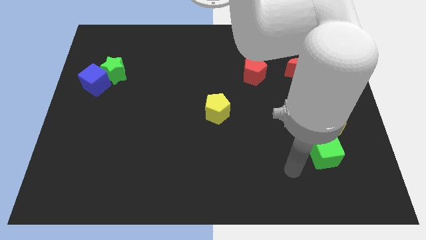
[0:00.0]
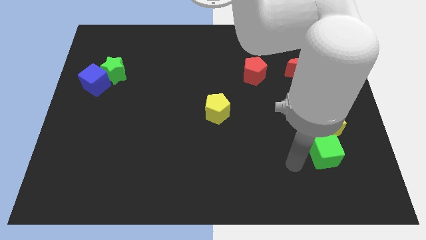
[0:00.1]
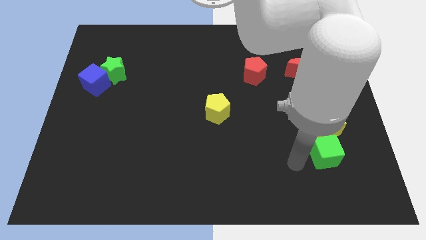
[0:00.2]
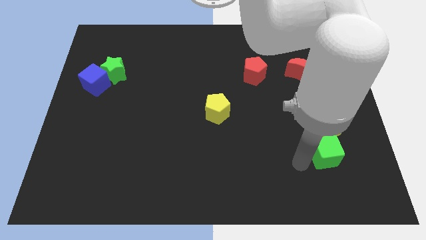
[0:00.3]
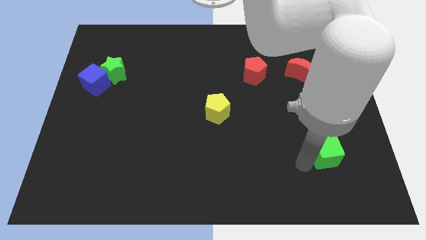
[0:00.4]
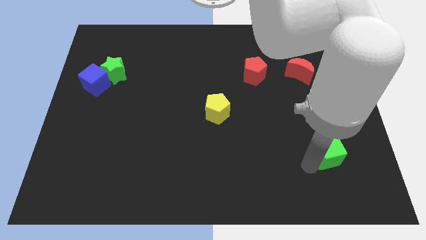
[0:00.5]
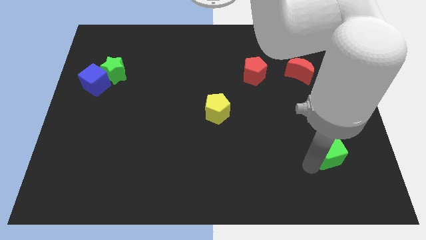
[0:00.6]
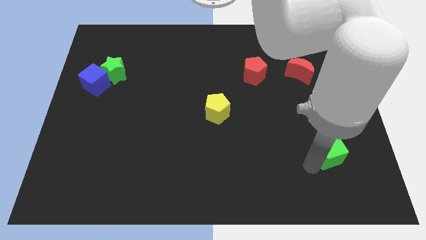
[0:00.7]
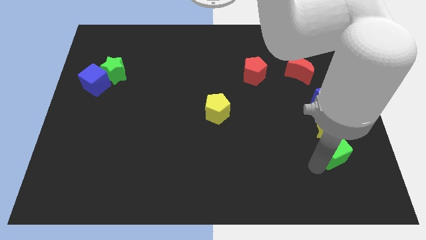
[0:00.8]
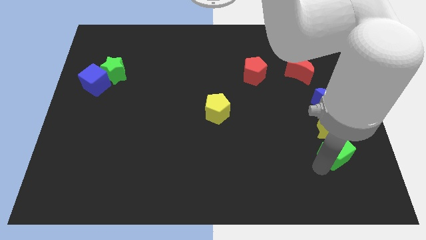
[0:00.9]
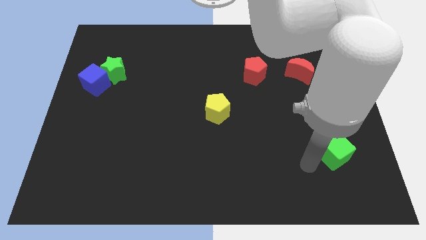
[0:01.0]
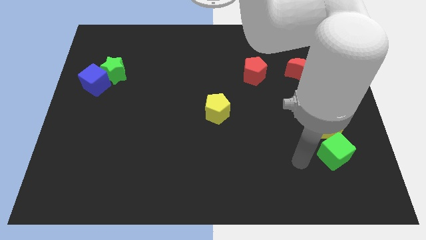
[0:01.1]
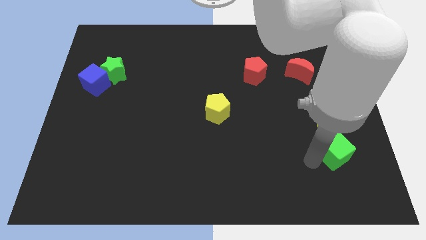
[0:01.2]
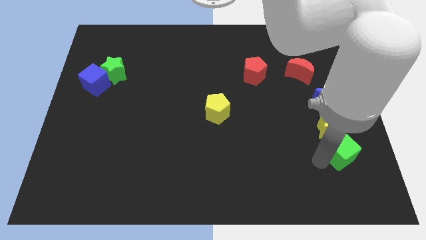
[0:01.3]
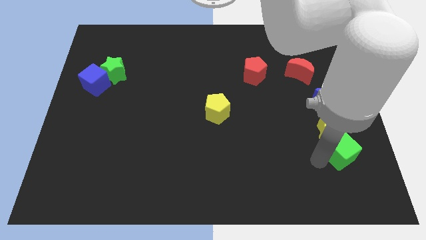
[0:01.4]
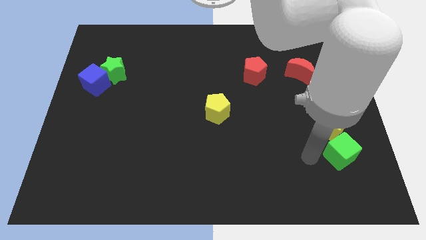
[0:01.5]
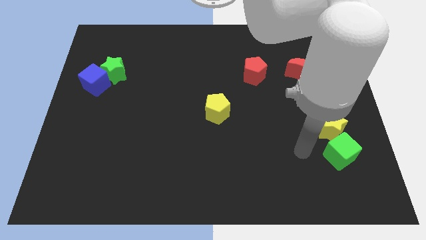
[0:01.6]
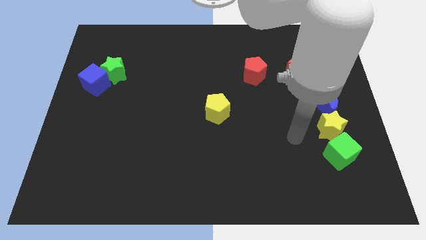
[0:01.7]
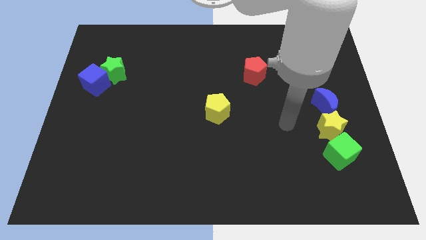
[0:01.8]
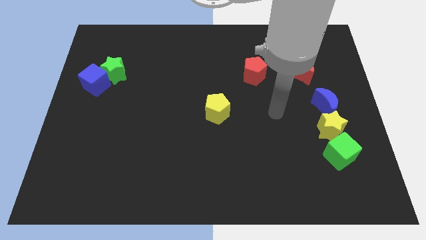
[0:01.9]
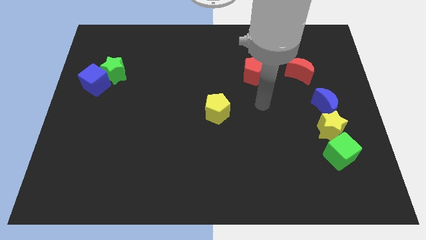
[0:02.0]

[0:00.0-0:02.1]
move green cube close to yellow star

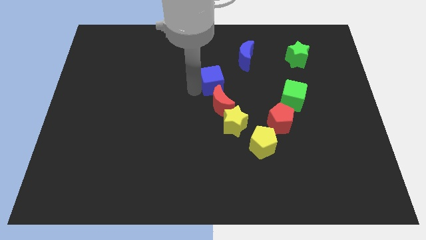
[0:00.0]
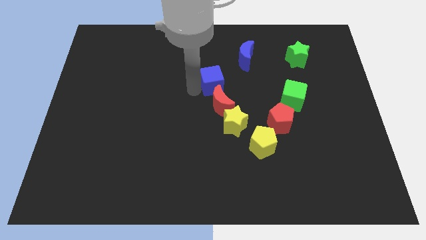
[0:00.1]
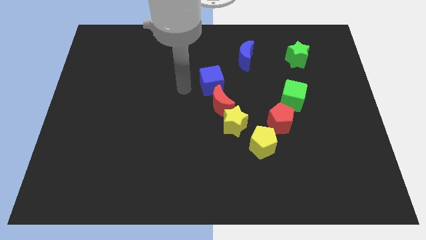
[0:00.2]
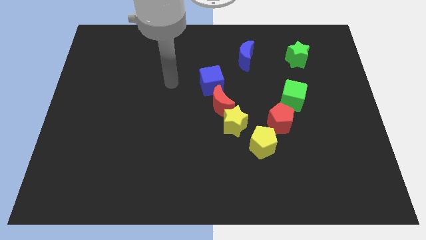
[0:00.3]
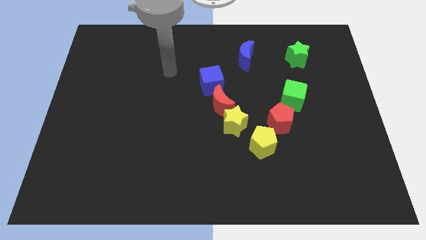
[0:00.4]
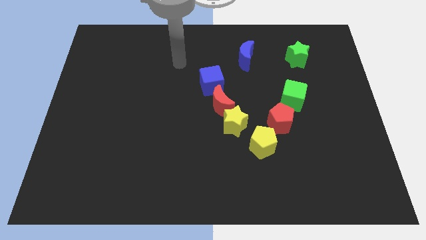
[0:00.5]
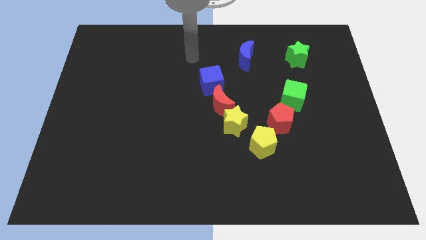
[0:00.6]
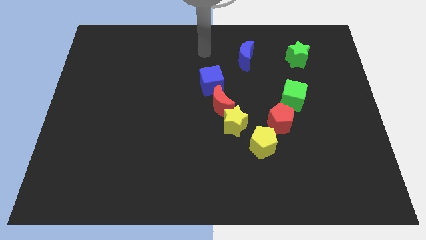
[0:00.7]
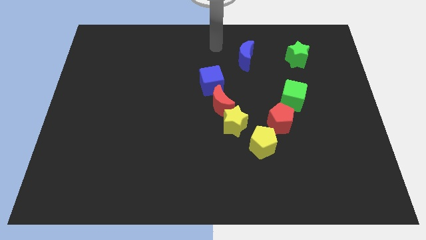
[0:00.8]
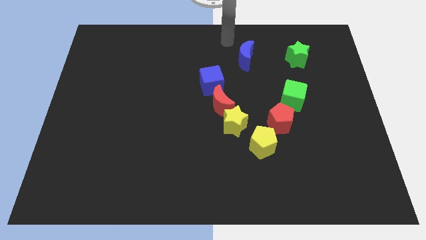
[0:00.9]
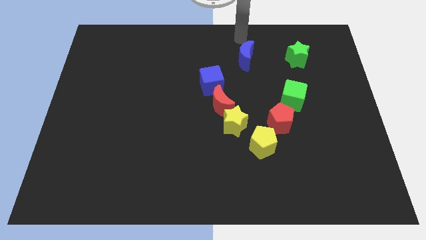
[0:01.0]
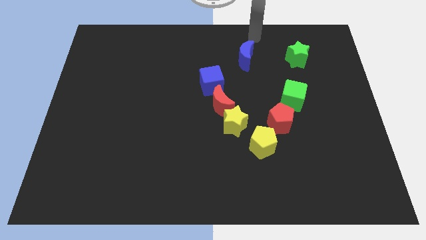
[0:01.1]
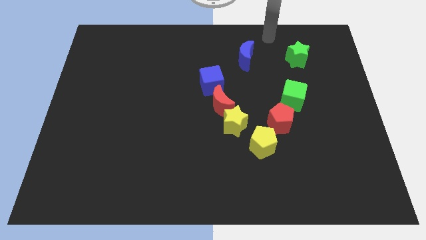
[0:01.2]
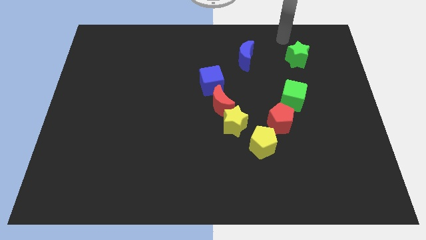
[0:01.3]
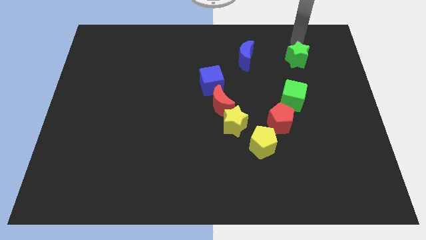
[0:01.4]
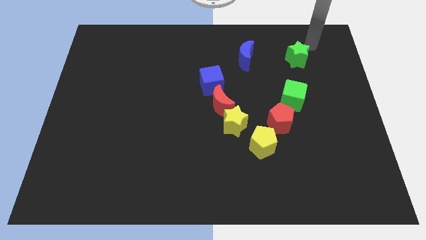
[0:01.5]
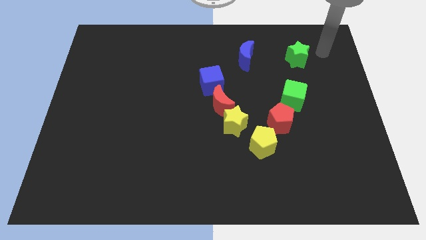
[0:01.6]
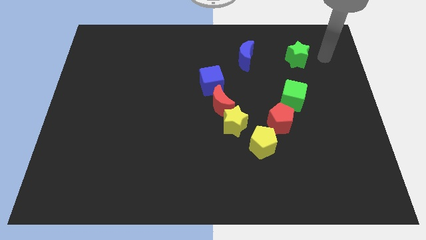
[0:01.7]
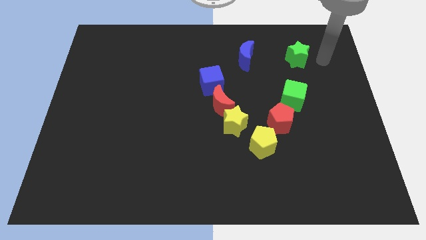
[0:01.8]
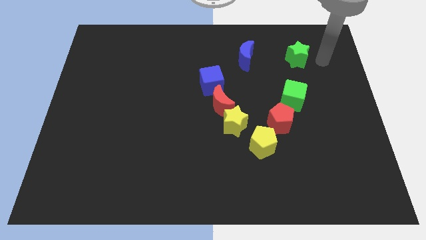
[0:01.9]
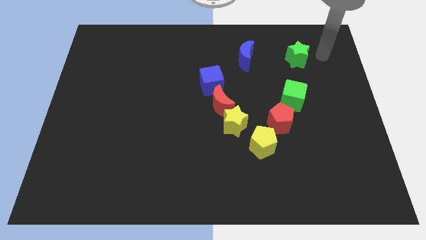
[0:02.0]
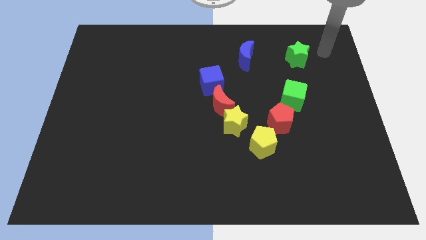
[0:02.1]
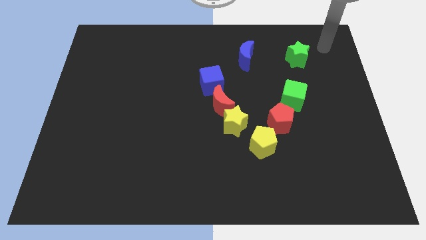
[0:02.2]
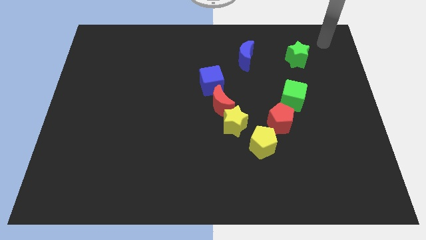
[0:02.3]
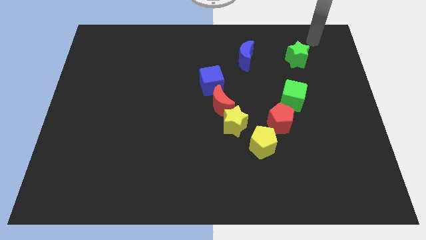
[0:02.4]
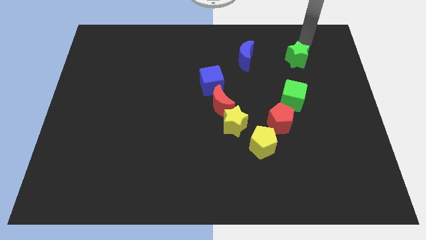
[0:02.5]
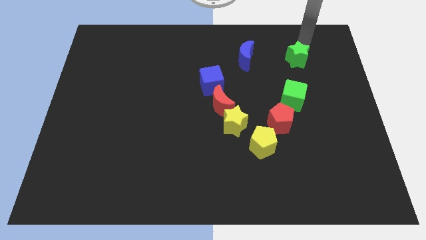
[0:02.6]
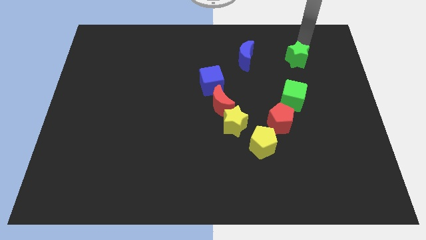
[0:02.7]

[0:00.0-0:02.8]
point your arm at the top of green star

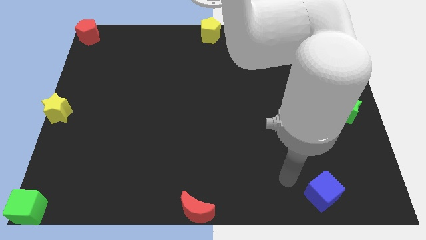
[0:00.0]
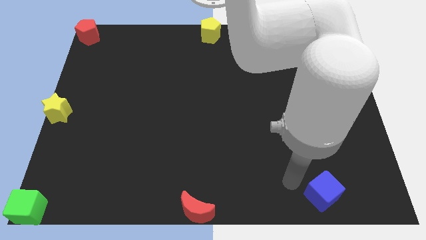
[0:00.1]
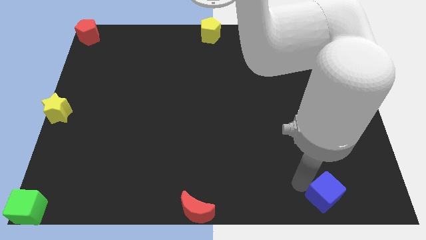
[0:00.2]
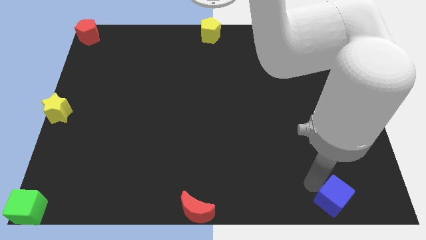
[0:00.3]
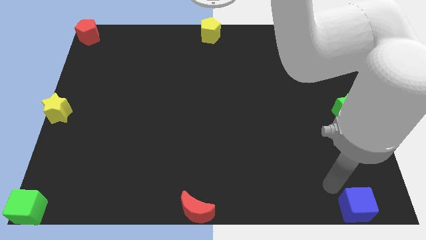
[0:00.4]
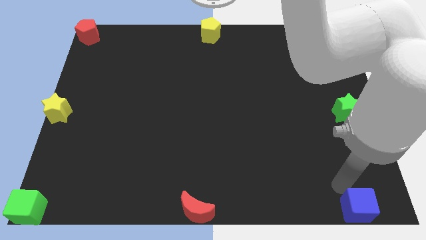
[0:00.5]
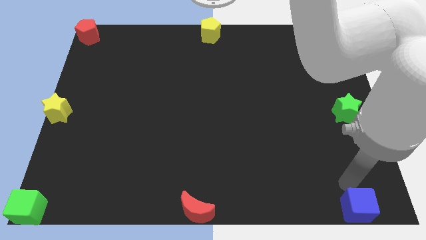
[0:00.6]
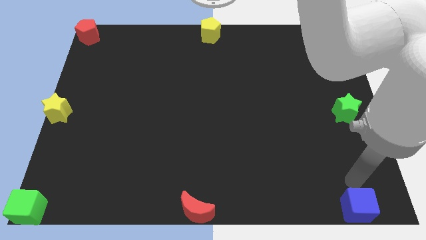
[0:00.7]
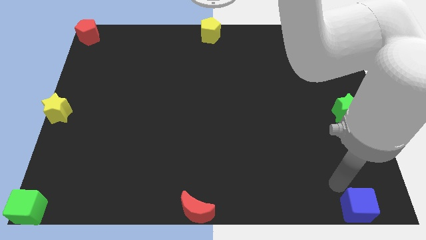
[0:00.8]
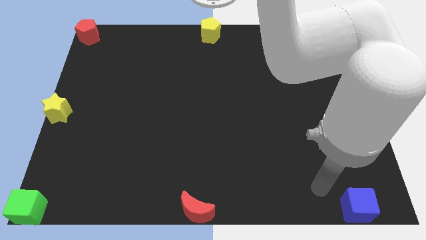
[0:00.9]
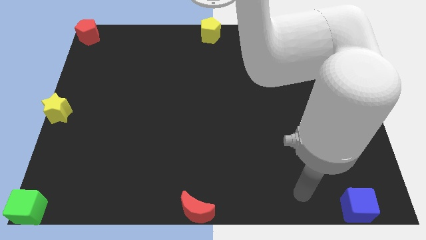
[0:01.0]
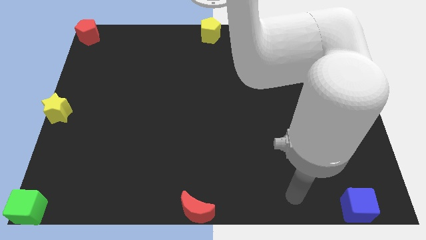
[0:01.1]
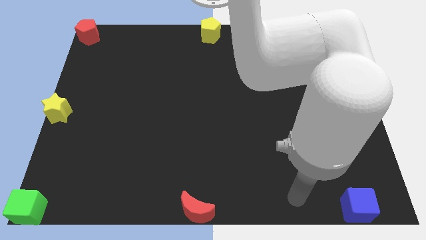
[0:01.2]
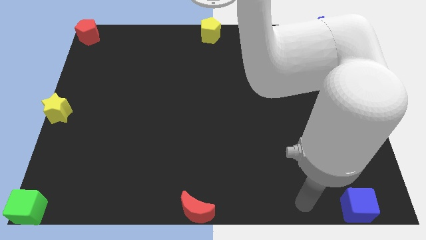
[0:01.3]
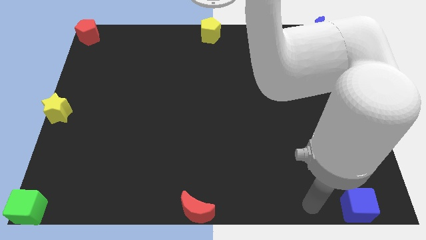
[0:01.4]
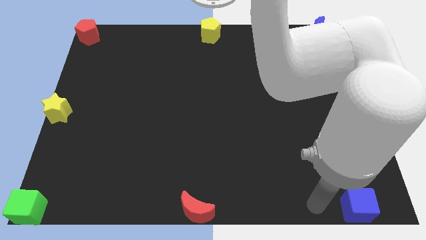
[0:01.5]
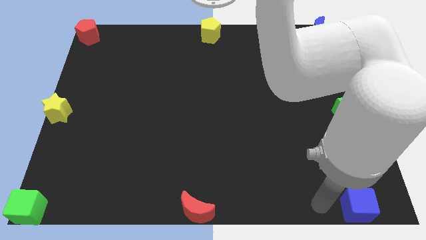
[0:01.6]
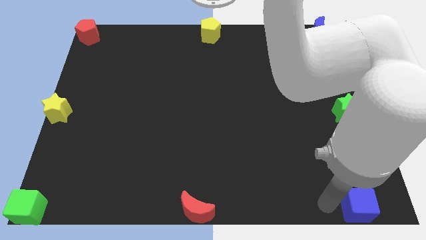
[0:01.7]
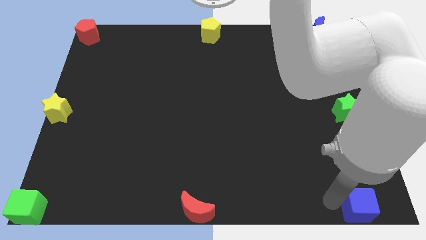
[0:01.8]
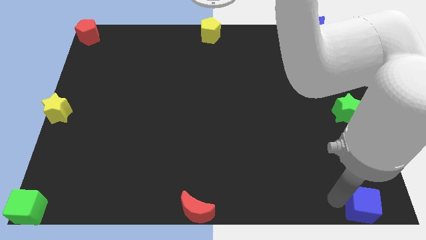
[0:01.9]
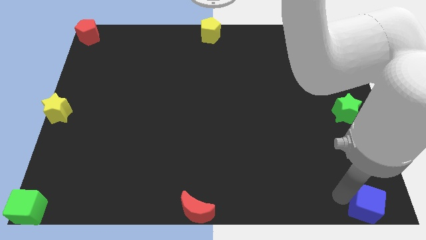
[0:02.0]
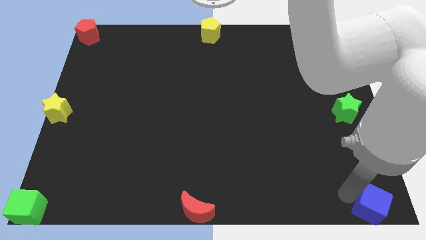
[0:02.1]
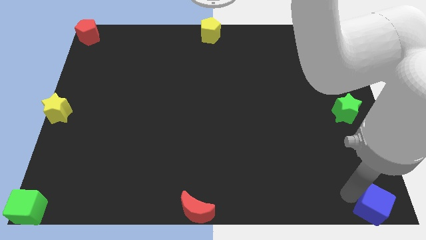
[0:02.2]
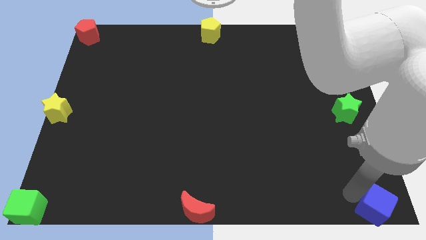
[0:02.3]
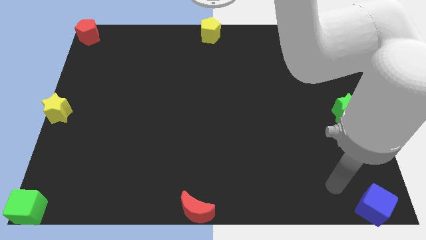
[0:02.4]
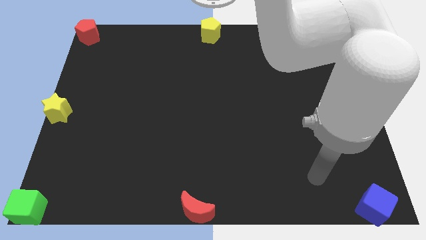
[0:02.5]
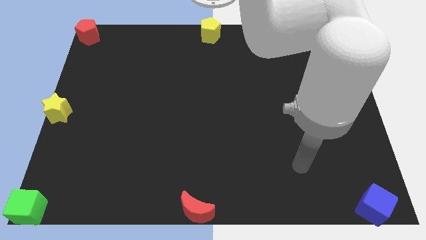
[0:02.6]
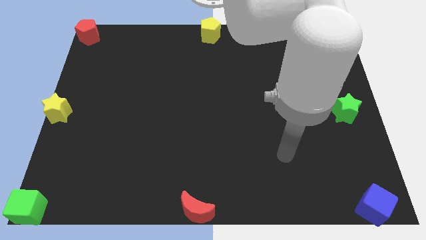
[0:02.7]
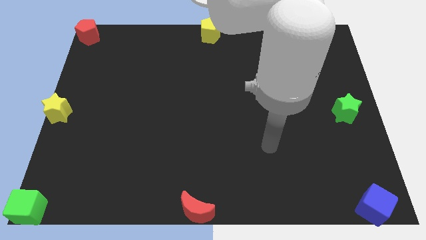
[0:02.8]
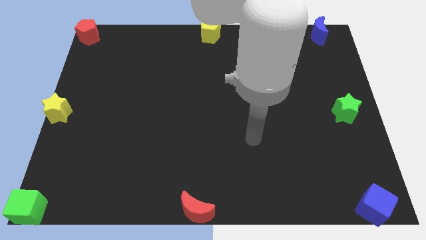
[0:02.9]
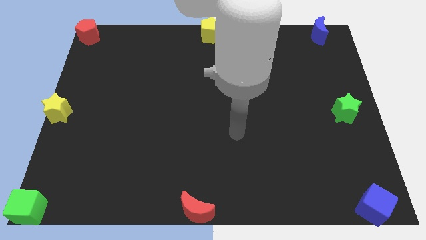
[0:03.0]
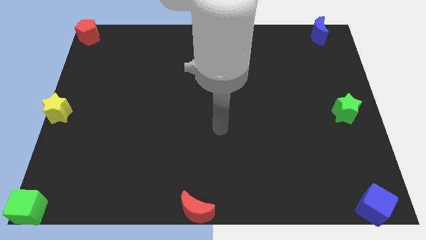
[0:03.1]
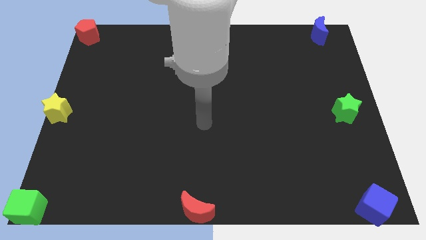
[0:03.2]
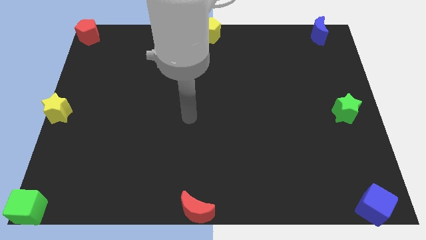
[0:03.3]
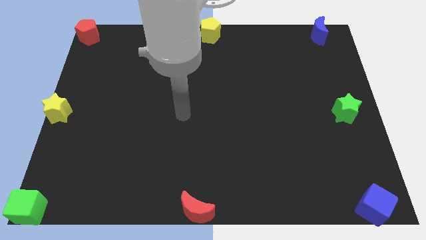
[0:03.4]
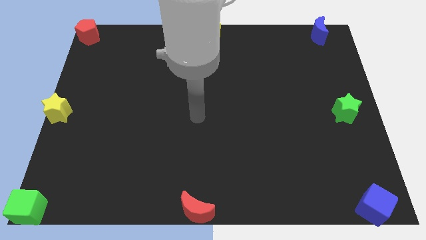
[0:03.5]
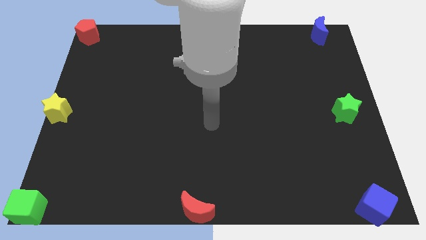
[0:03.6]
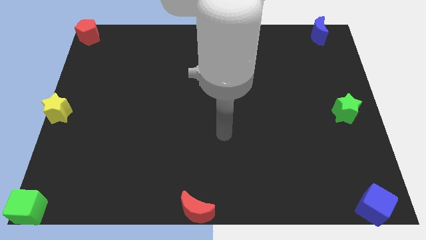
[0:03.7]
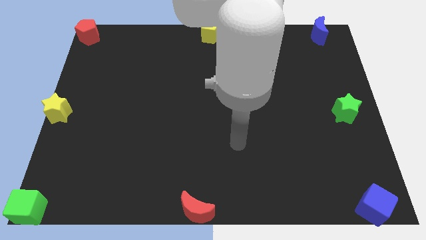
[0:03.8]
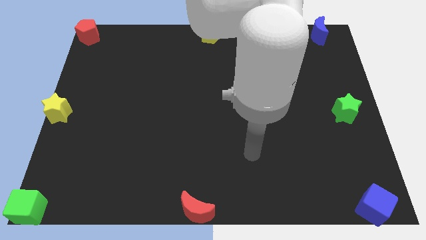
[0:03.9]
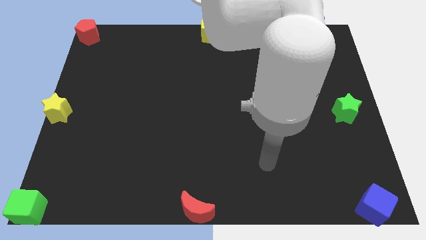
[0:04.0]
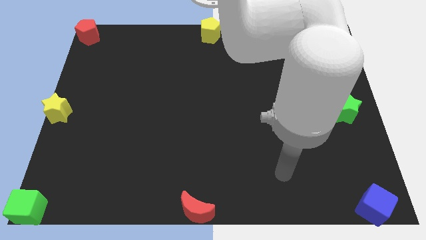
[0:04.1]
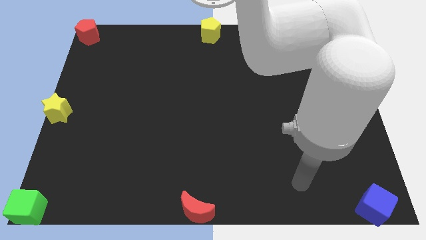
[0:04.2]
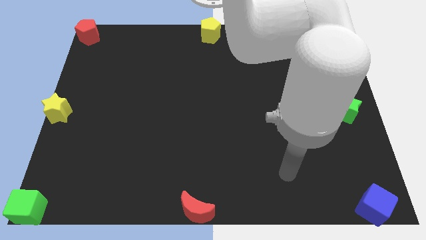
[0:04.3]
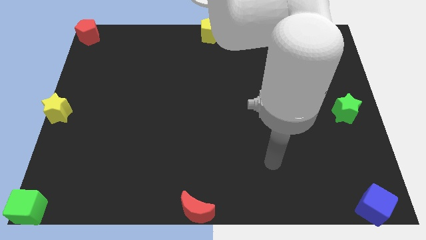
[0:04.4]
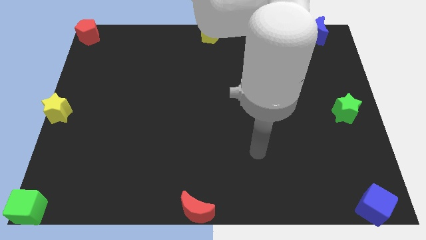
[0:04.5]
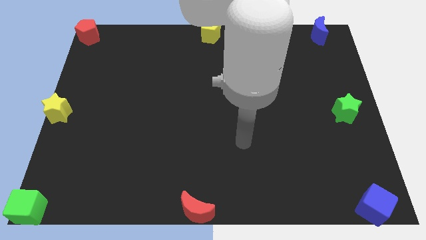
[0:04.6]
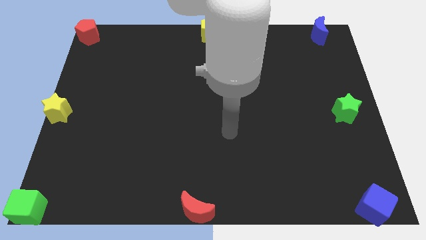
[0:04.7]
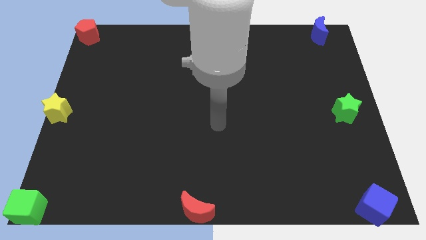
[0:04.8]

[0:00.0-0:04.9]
place the blue cube bottom right of the board
